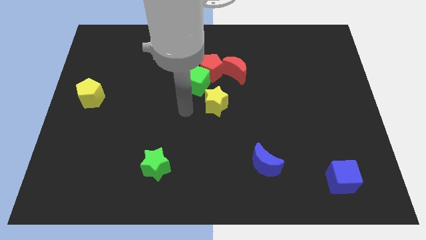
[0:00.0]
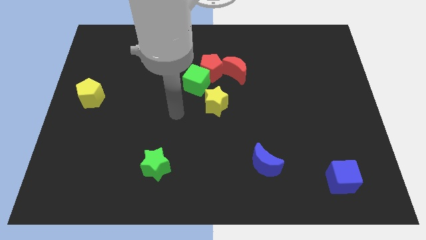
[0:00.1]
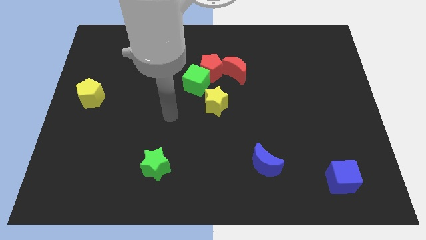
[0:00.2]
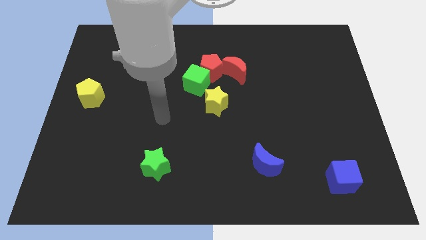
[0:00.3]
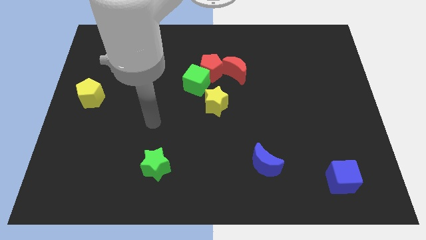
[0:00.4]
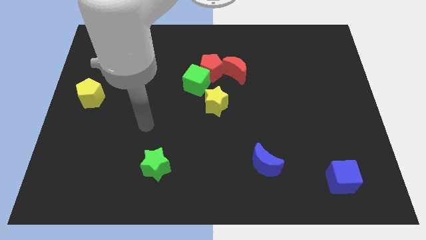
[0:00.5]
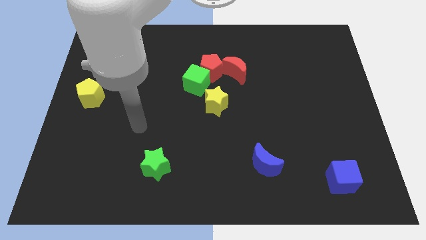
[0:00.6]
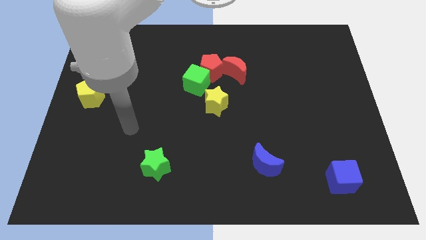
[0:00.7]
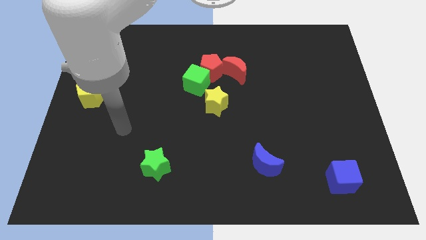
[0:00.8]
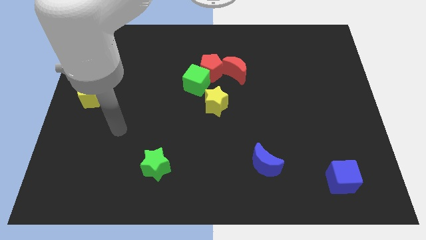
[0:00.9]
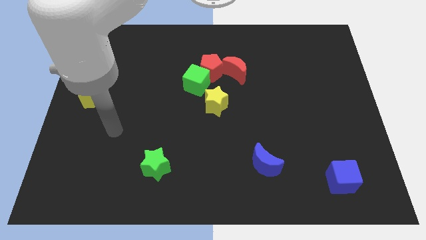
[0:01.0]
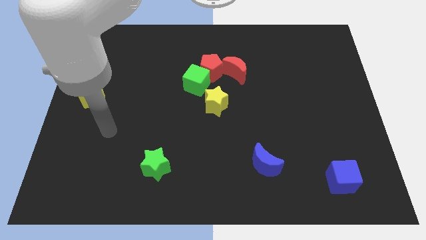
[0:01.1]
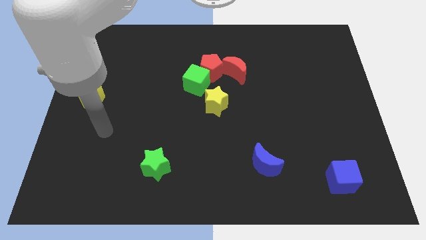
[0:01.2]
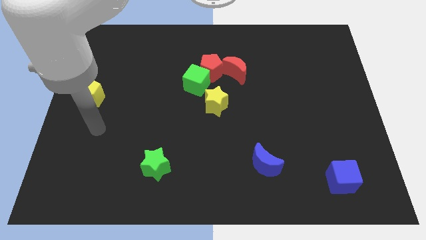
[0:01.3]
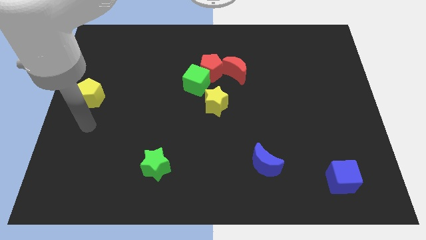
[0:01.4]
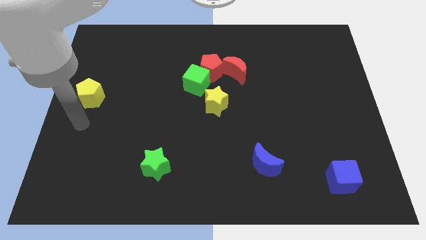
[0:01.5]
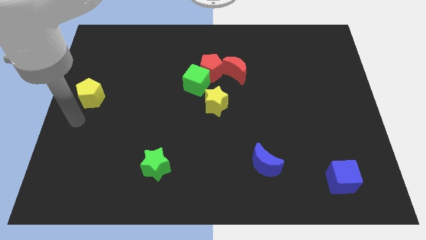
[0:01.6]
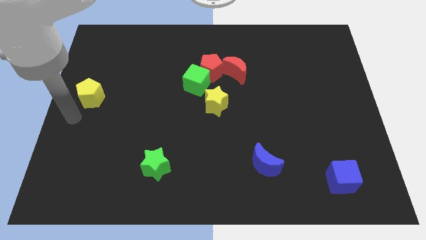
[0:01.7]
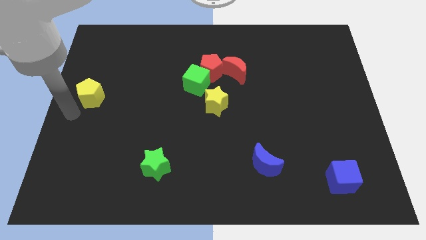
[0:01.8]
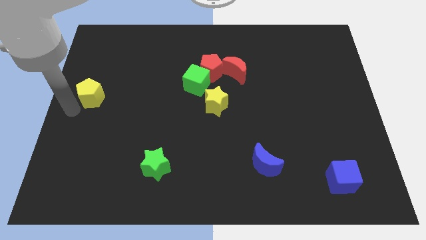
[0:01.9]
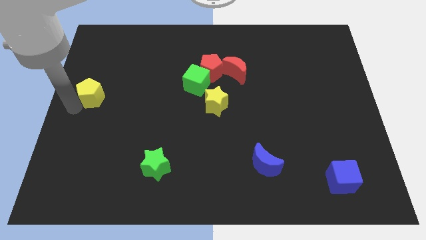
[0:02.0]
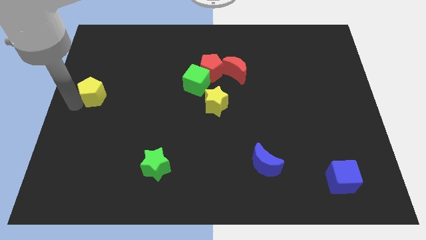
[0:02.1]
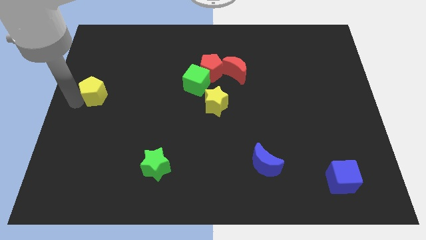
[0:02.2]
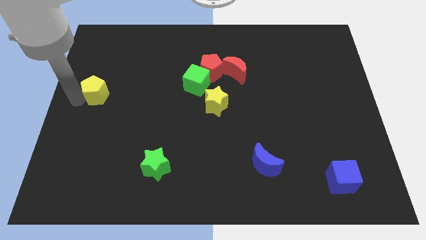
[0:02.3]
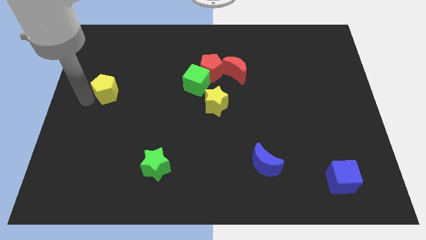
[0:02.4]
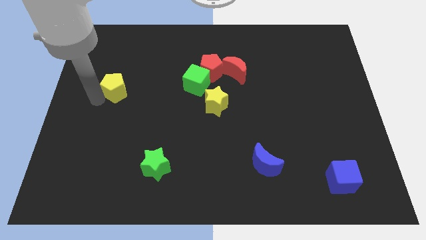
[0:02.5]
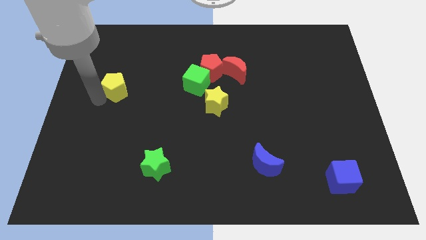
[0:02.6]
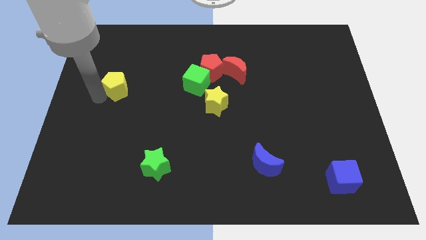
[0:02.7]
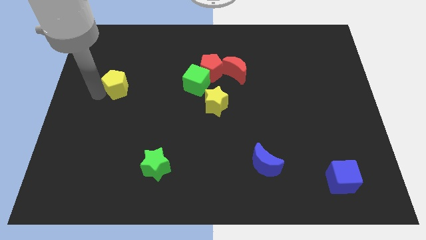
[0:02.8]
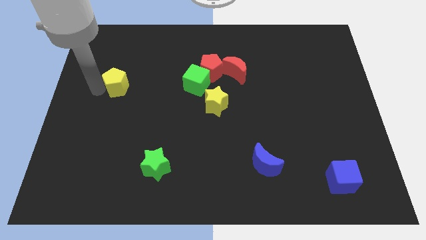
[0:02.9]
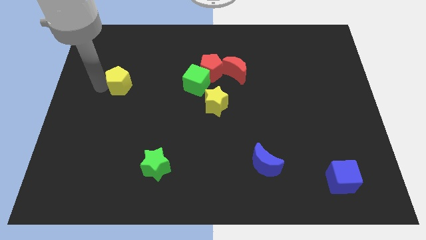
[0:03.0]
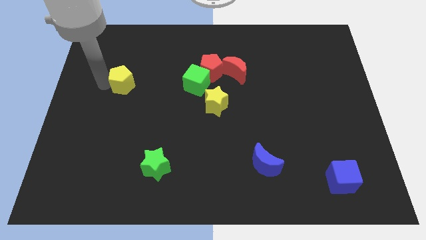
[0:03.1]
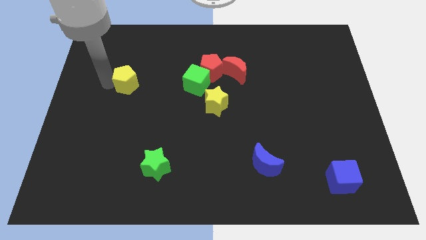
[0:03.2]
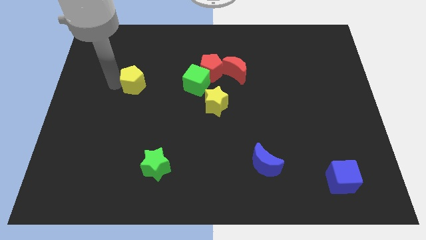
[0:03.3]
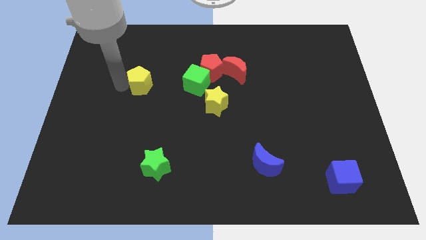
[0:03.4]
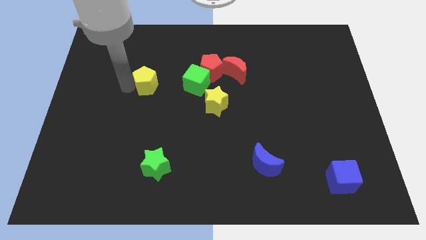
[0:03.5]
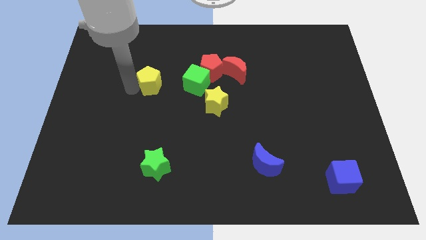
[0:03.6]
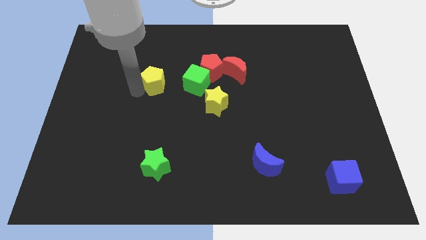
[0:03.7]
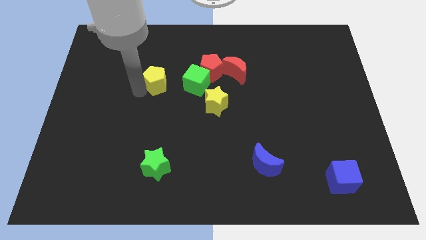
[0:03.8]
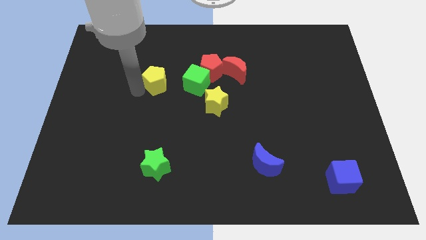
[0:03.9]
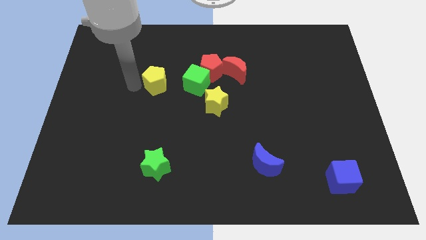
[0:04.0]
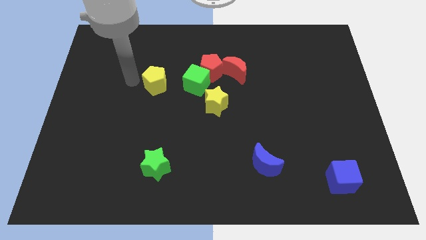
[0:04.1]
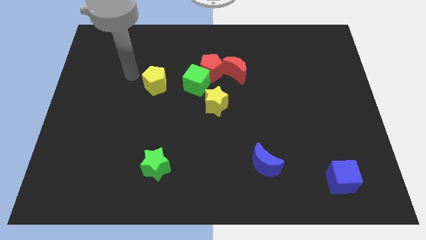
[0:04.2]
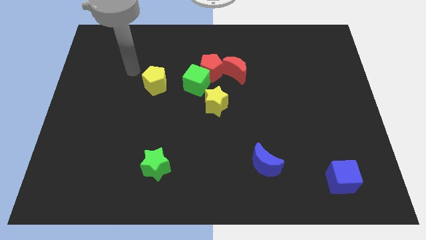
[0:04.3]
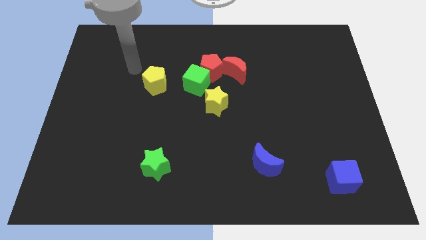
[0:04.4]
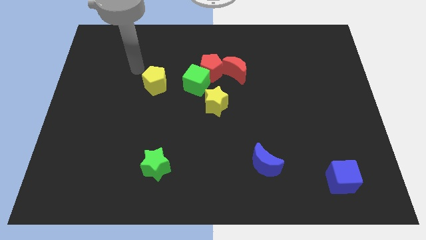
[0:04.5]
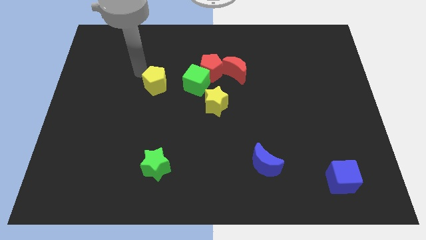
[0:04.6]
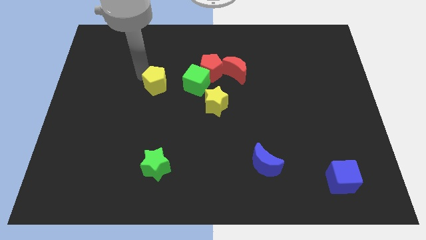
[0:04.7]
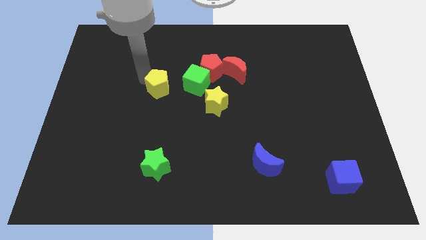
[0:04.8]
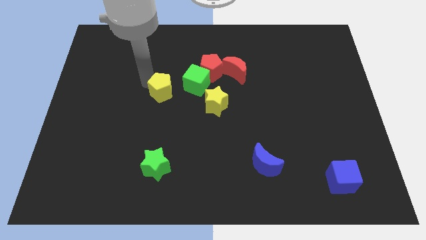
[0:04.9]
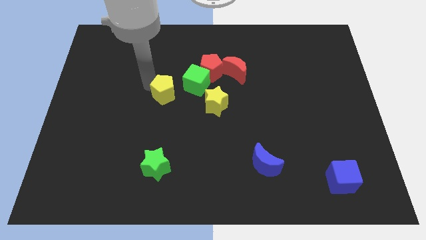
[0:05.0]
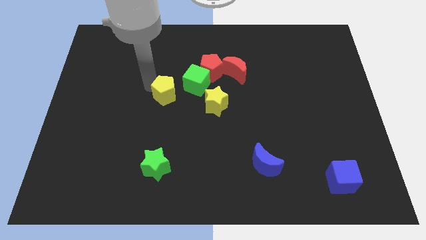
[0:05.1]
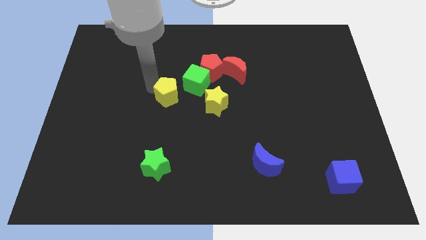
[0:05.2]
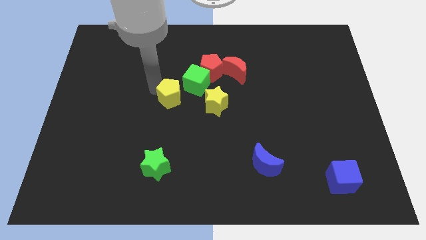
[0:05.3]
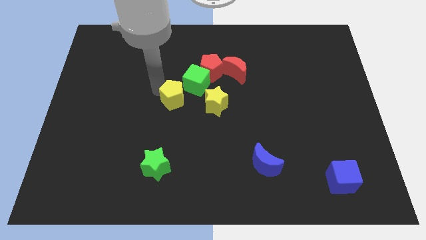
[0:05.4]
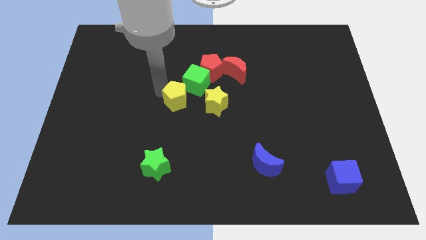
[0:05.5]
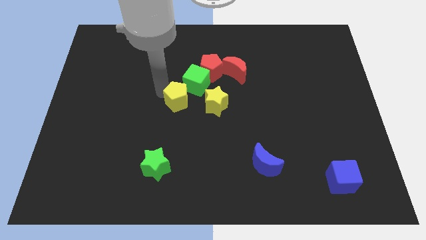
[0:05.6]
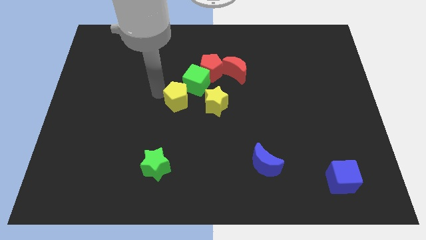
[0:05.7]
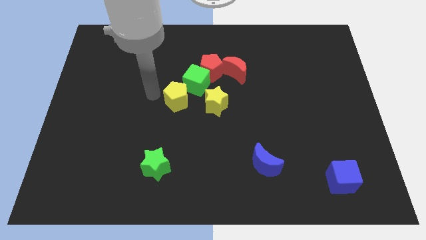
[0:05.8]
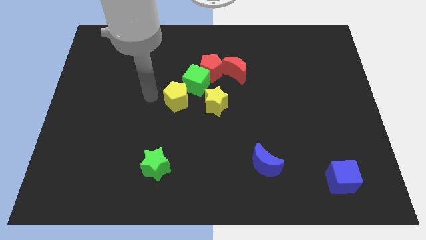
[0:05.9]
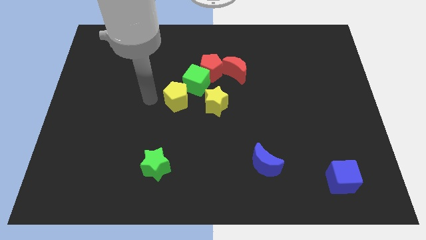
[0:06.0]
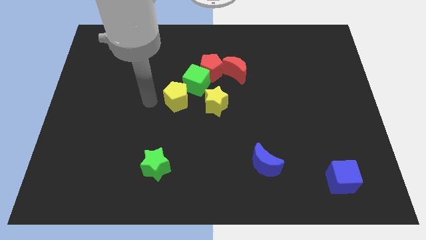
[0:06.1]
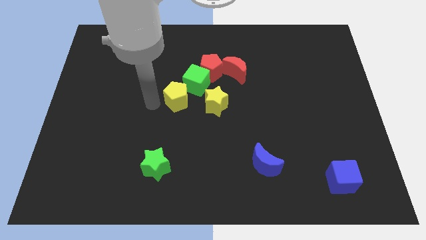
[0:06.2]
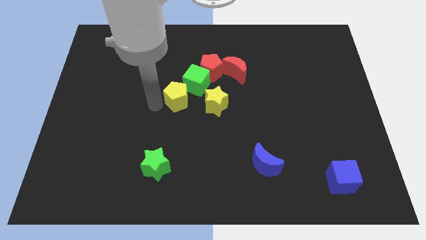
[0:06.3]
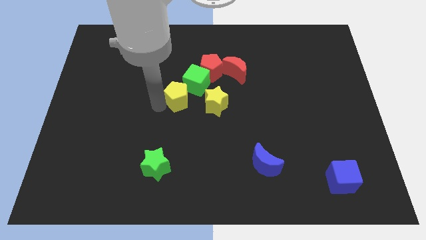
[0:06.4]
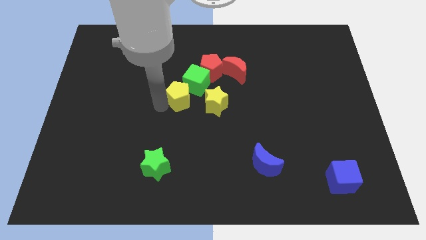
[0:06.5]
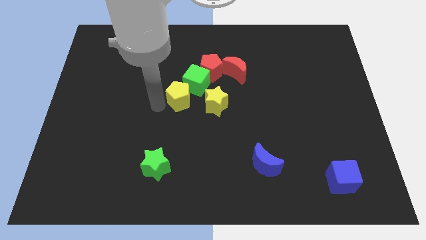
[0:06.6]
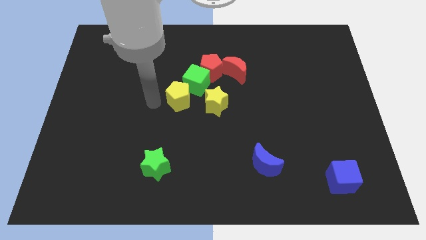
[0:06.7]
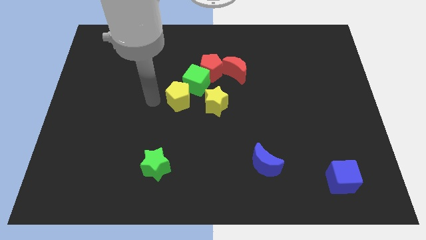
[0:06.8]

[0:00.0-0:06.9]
move the yellow pentagon to the left of the yellow star

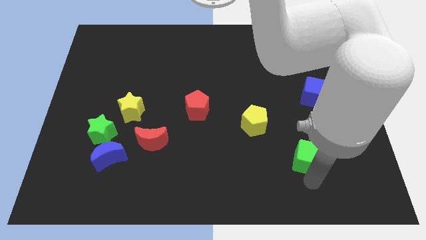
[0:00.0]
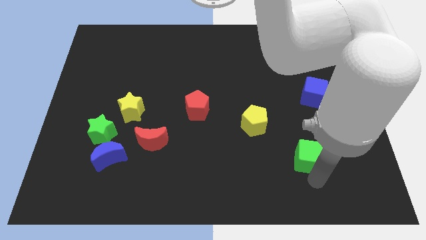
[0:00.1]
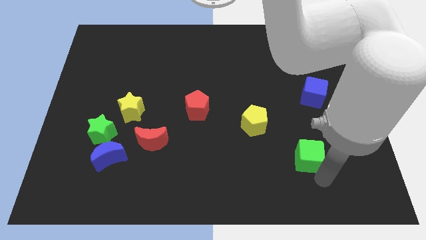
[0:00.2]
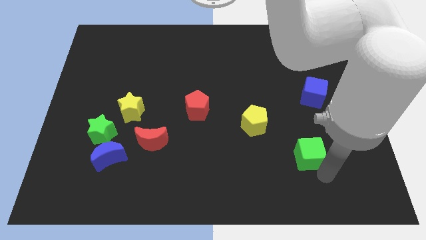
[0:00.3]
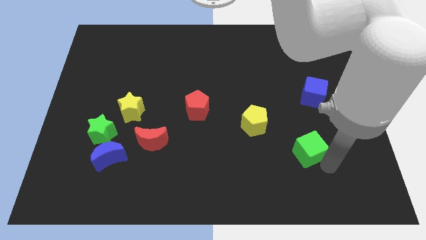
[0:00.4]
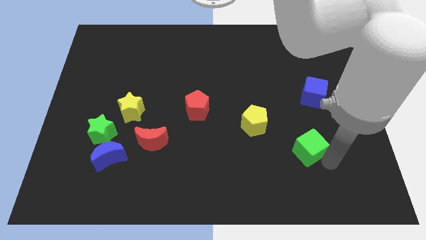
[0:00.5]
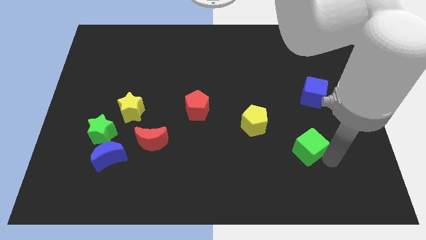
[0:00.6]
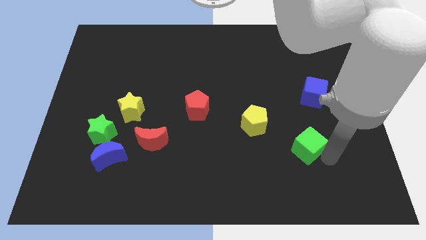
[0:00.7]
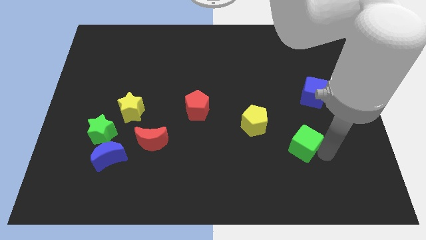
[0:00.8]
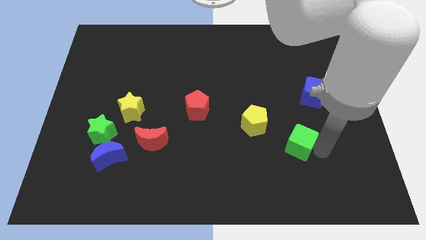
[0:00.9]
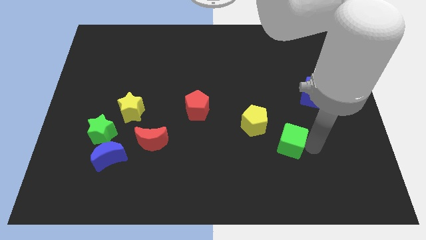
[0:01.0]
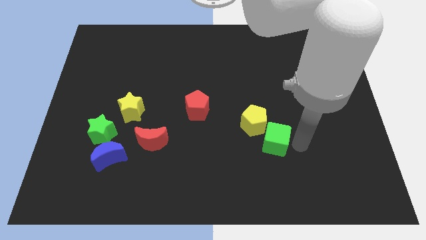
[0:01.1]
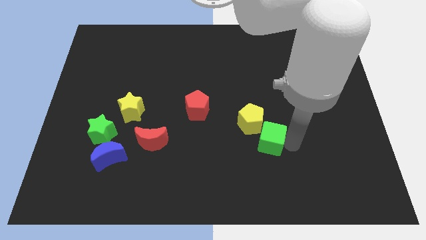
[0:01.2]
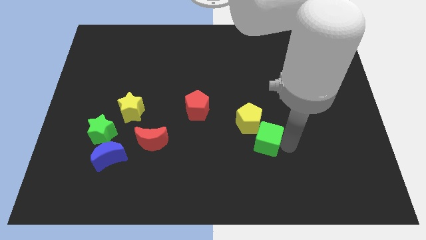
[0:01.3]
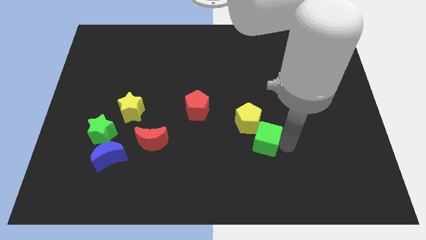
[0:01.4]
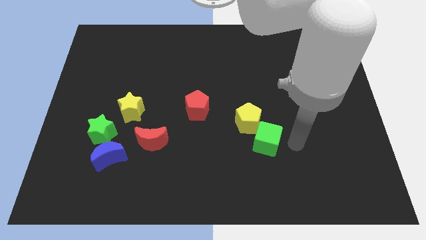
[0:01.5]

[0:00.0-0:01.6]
put the green cube into the yellow pentagon

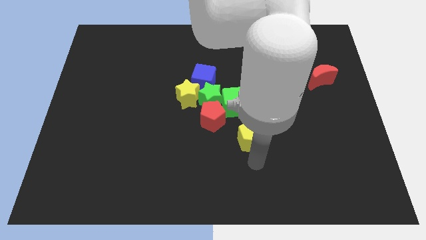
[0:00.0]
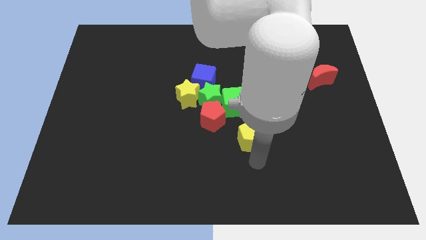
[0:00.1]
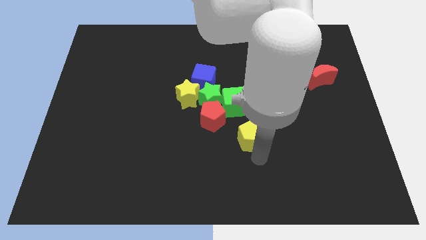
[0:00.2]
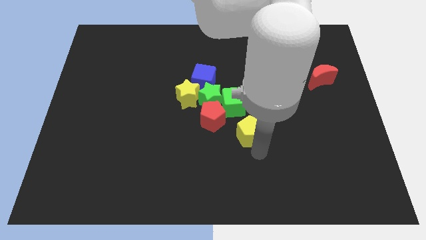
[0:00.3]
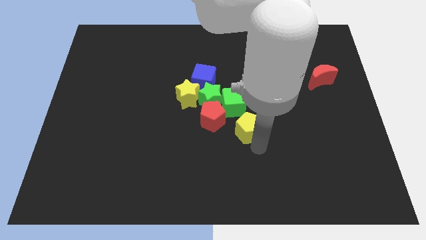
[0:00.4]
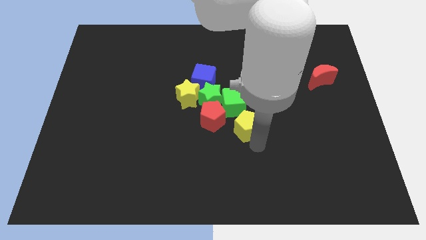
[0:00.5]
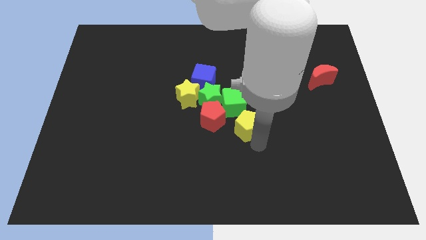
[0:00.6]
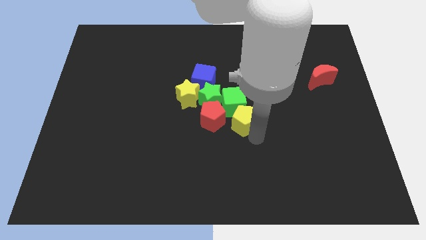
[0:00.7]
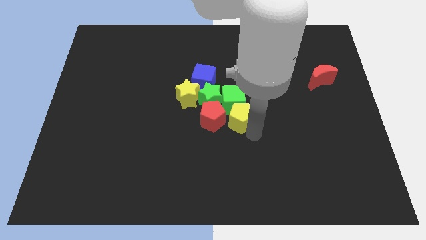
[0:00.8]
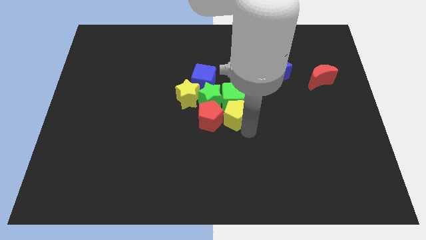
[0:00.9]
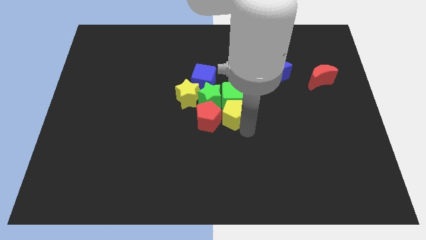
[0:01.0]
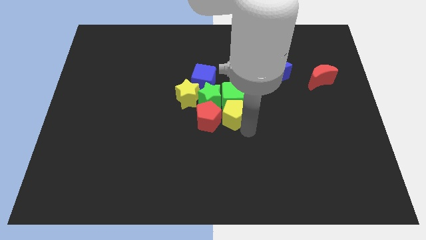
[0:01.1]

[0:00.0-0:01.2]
push the yellow pentagon into the green cube
